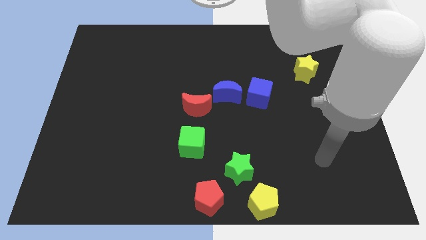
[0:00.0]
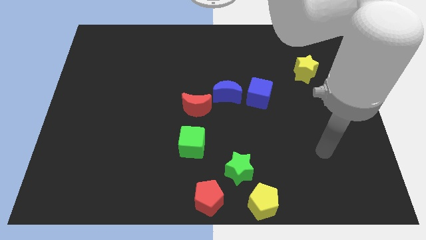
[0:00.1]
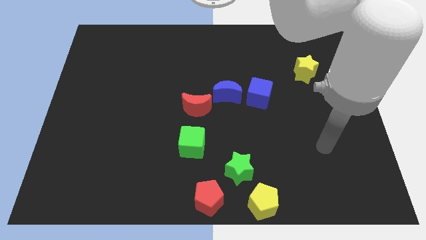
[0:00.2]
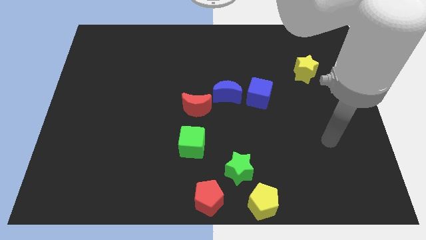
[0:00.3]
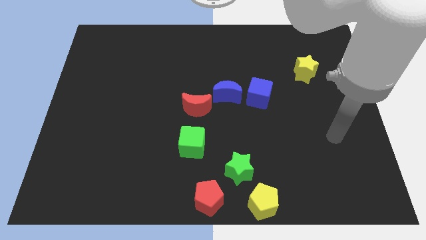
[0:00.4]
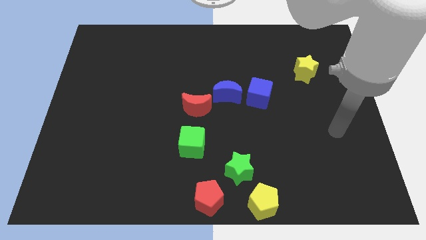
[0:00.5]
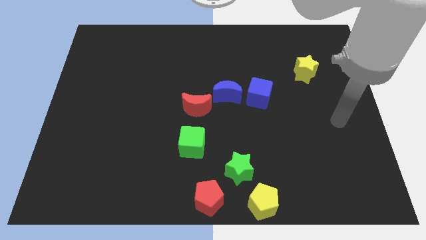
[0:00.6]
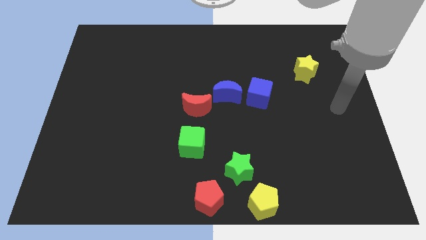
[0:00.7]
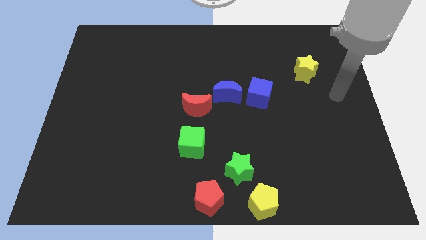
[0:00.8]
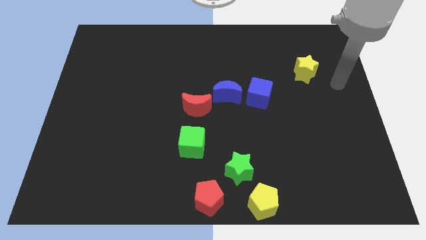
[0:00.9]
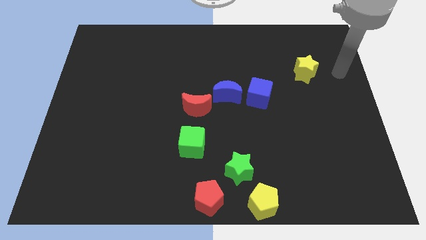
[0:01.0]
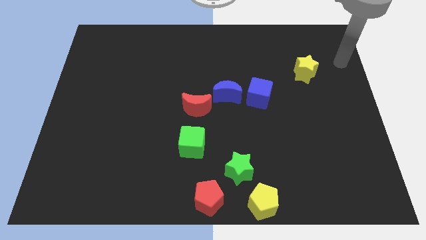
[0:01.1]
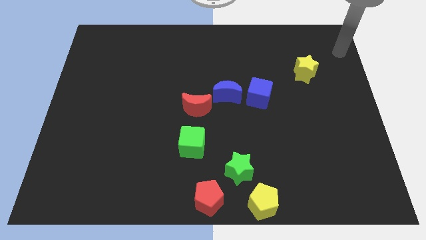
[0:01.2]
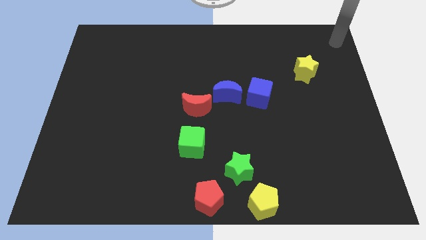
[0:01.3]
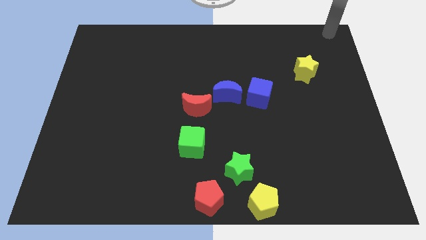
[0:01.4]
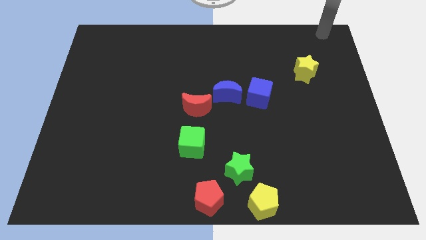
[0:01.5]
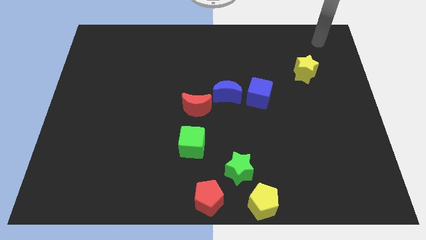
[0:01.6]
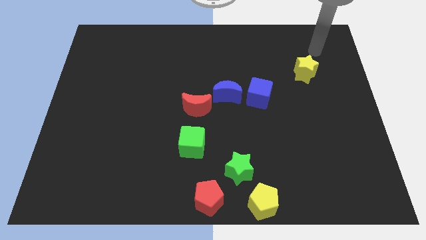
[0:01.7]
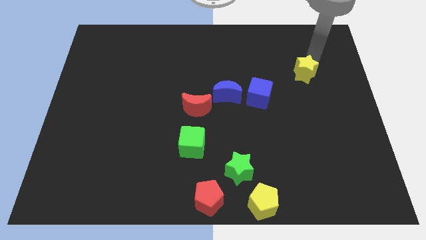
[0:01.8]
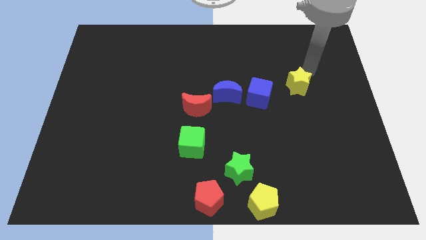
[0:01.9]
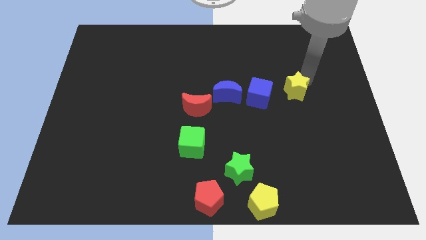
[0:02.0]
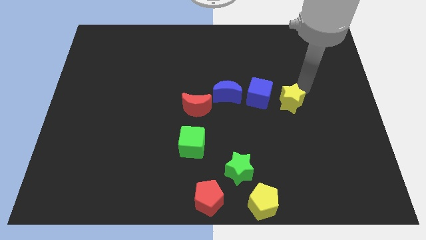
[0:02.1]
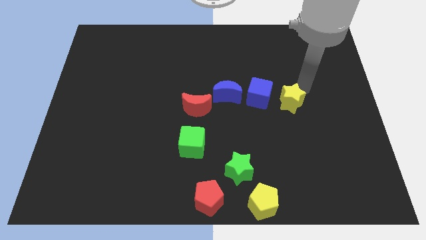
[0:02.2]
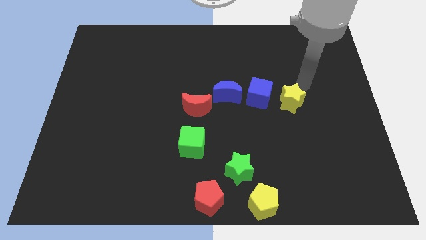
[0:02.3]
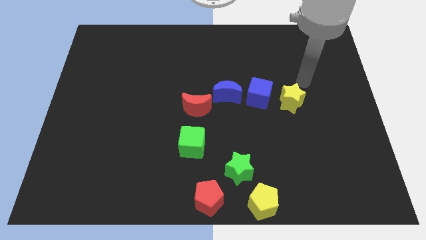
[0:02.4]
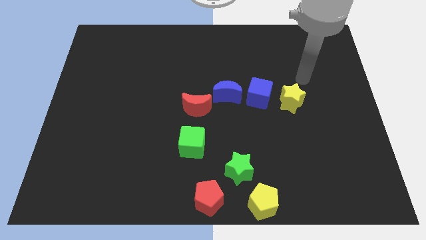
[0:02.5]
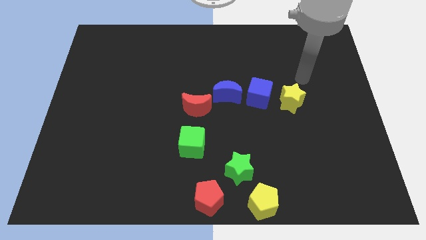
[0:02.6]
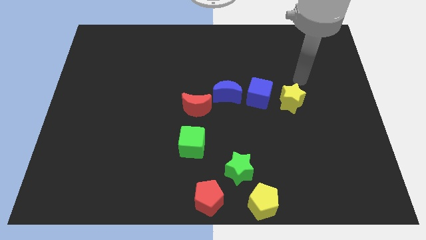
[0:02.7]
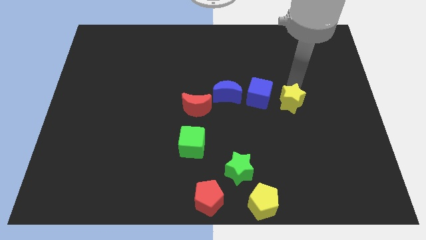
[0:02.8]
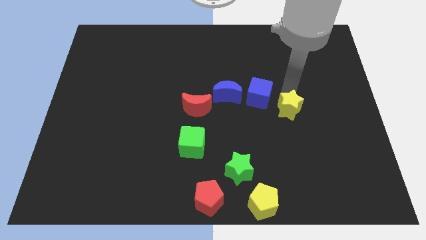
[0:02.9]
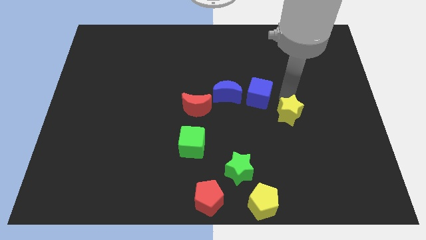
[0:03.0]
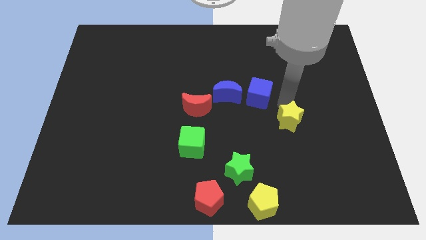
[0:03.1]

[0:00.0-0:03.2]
move yellow star to the bottom right of blue cube

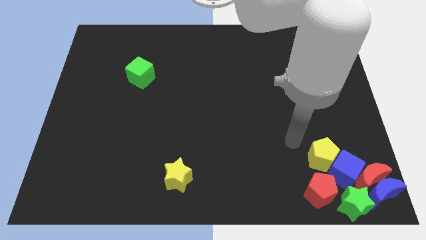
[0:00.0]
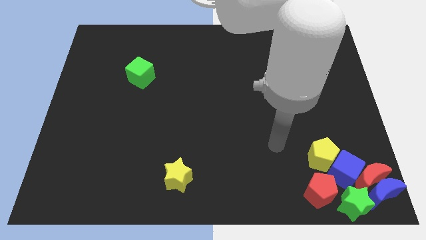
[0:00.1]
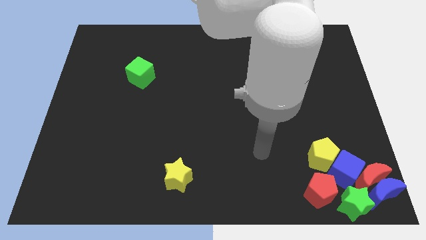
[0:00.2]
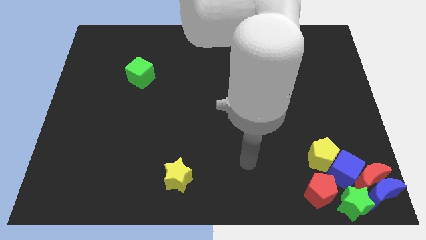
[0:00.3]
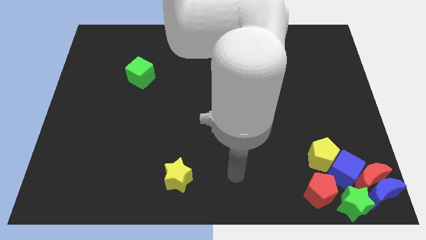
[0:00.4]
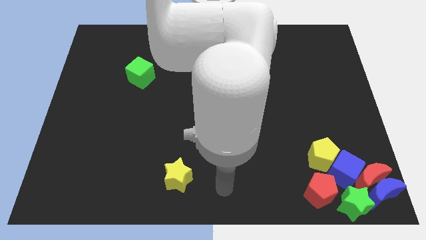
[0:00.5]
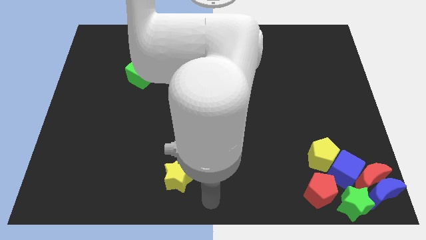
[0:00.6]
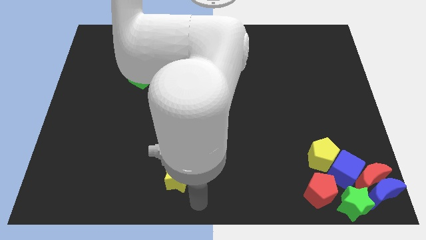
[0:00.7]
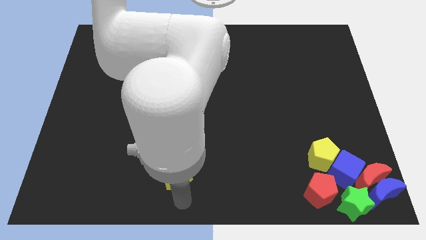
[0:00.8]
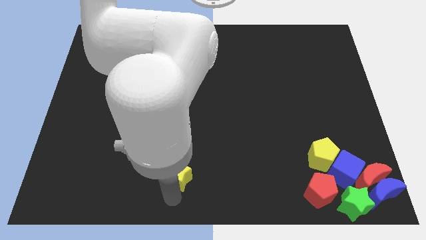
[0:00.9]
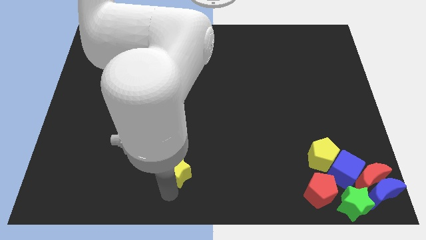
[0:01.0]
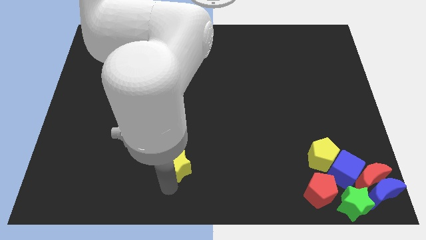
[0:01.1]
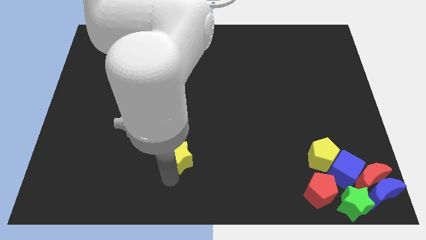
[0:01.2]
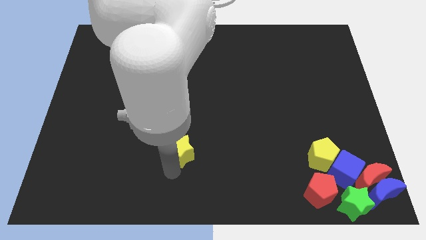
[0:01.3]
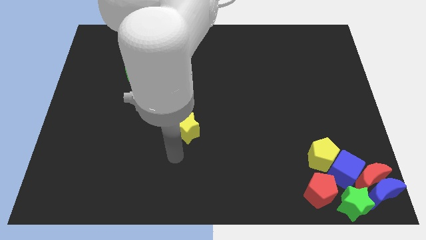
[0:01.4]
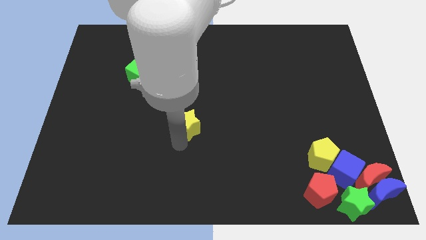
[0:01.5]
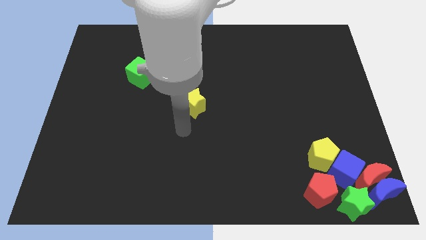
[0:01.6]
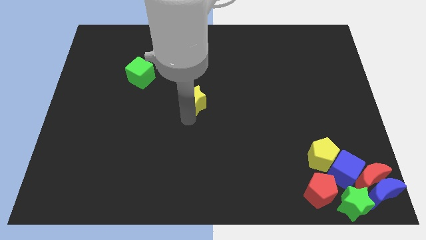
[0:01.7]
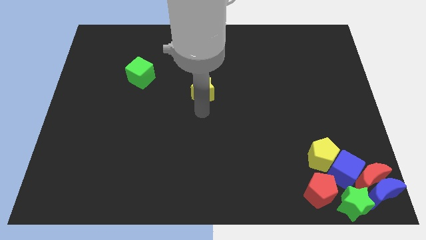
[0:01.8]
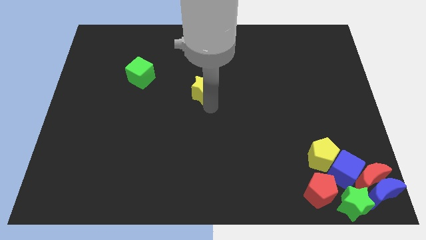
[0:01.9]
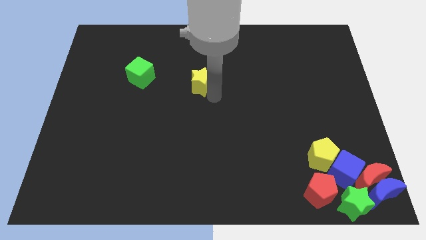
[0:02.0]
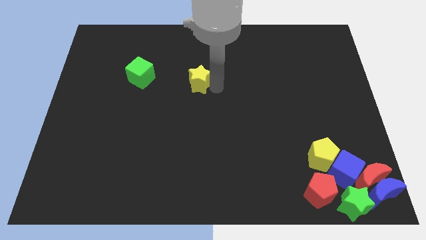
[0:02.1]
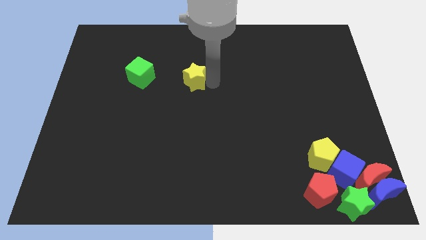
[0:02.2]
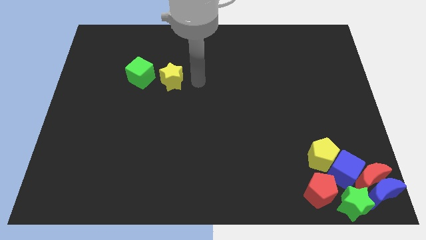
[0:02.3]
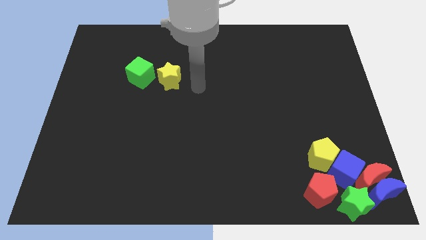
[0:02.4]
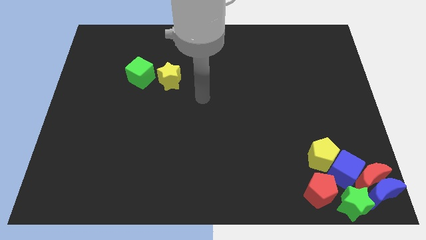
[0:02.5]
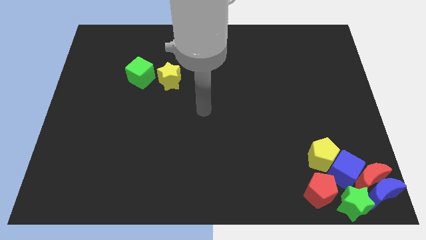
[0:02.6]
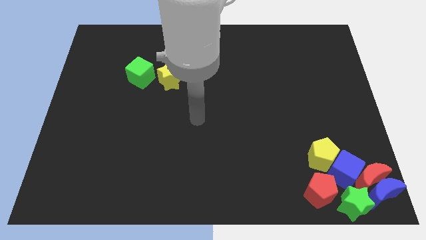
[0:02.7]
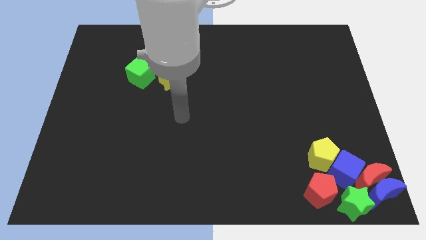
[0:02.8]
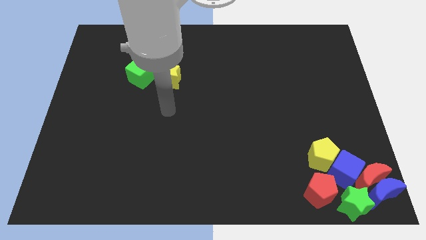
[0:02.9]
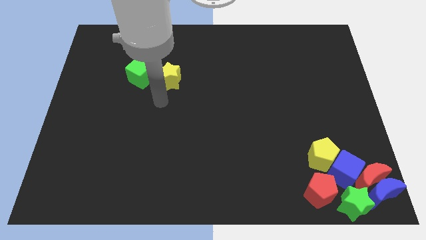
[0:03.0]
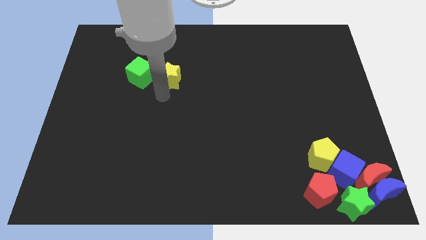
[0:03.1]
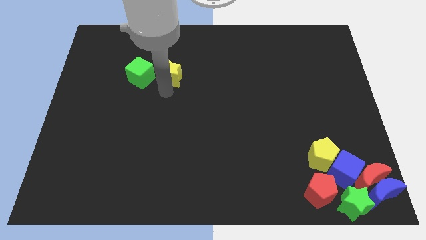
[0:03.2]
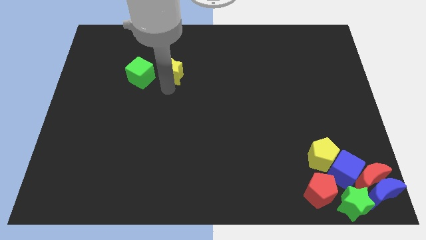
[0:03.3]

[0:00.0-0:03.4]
put the yellow star at the right side of the green cube

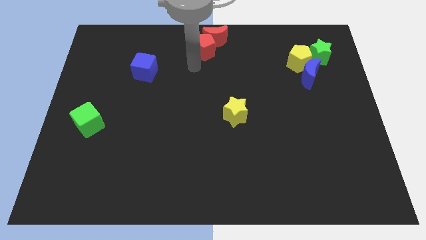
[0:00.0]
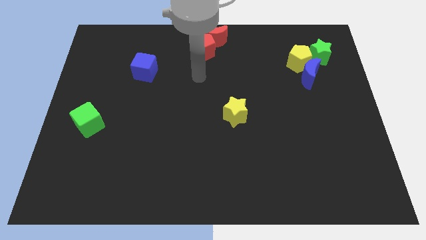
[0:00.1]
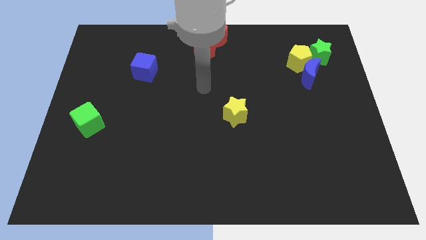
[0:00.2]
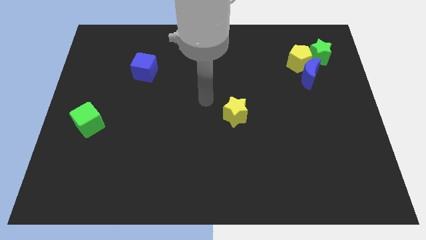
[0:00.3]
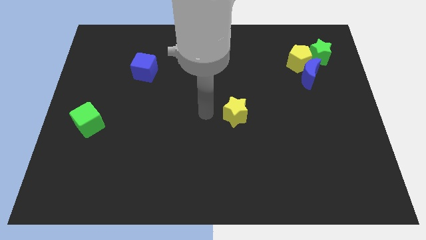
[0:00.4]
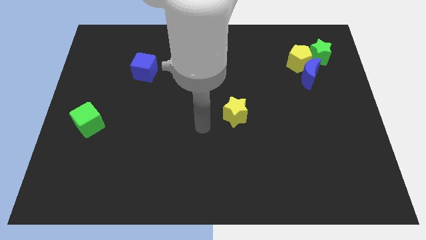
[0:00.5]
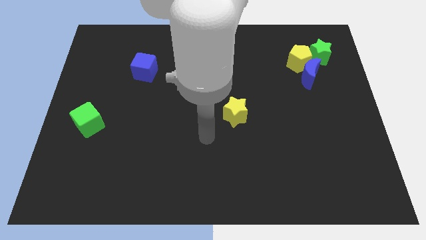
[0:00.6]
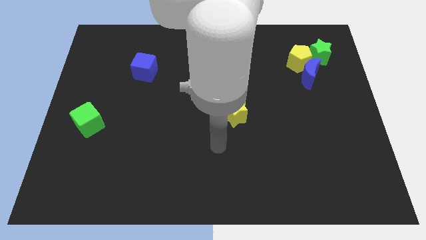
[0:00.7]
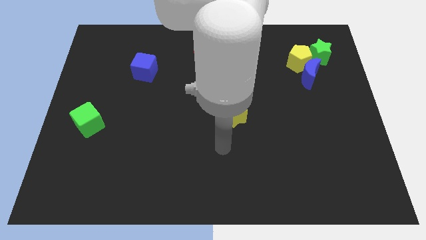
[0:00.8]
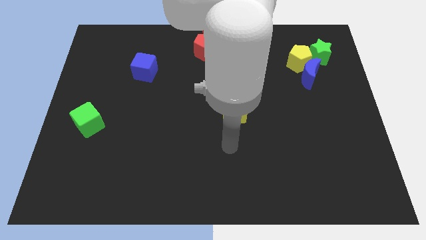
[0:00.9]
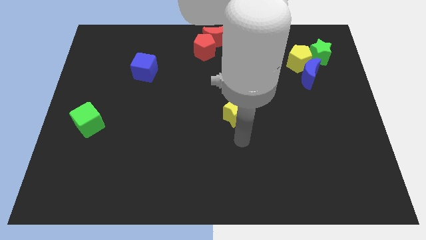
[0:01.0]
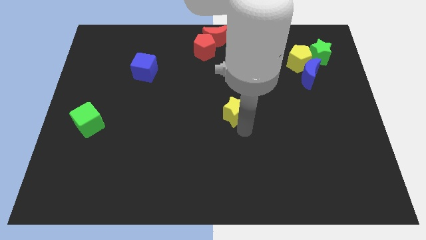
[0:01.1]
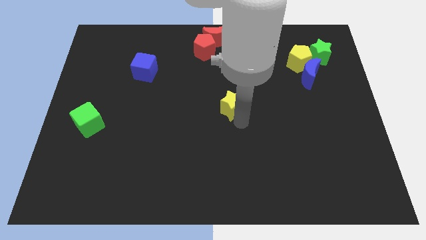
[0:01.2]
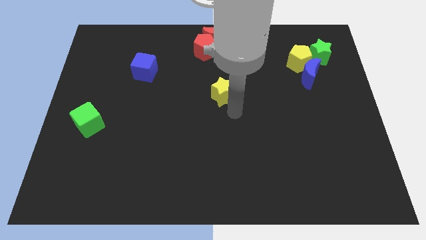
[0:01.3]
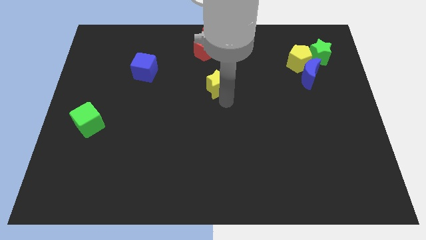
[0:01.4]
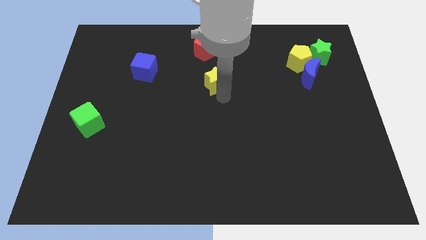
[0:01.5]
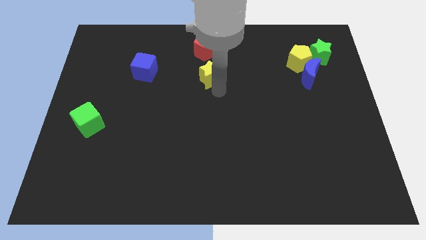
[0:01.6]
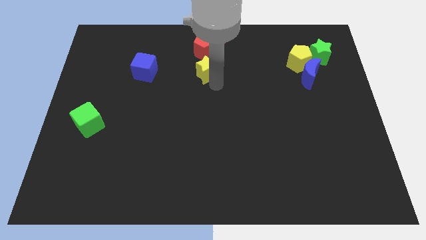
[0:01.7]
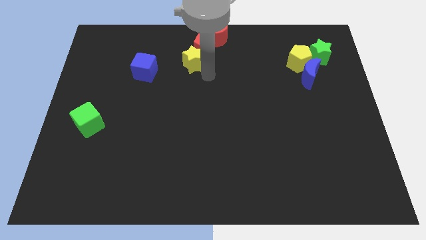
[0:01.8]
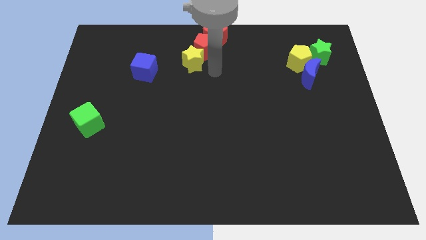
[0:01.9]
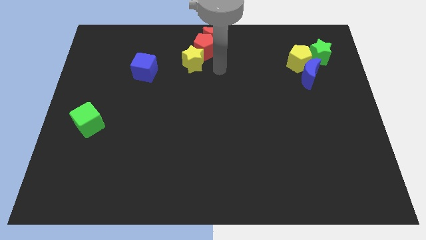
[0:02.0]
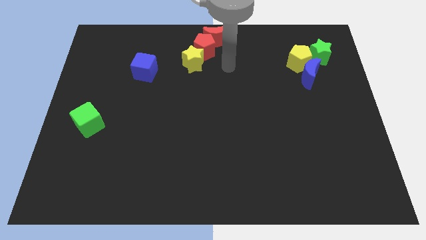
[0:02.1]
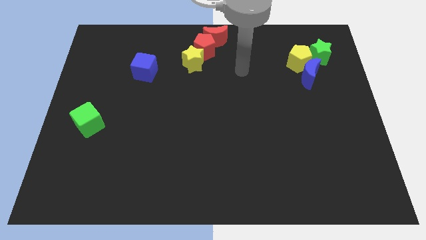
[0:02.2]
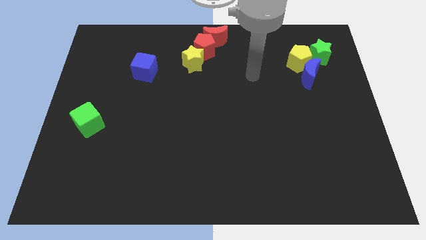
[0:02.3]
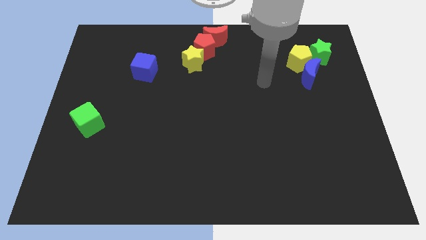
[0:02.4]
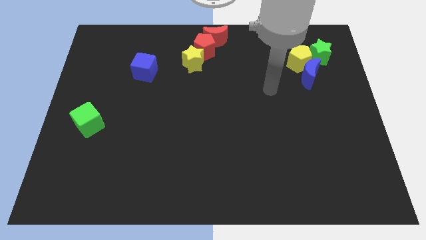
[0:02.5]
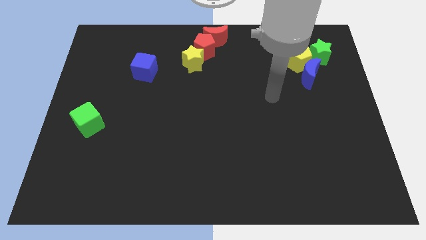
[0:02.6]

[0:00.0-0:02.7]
move the yellow star close to the bottom side of the red pentagon
